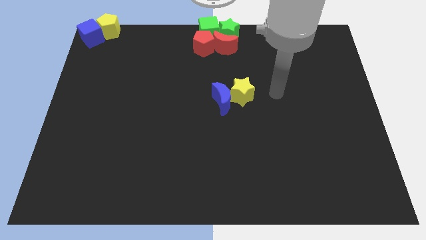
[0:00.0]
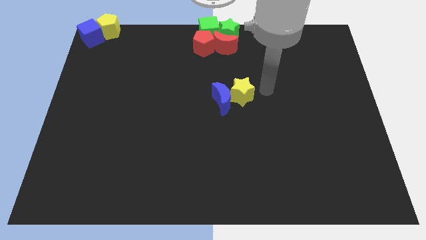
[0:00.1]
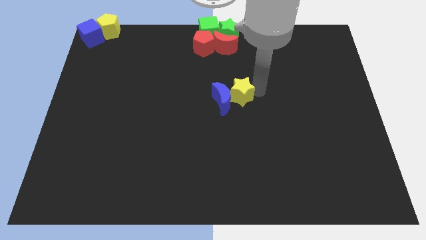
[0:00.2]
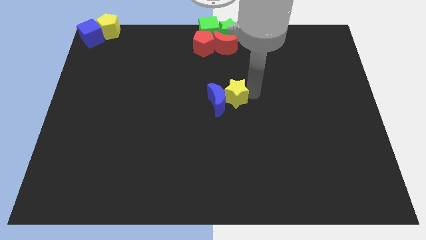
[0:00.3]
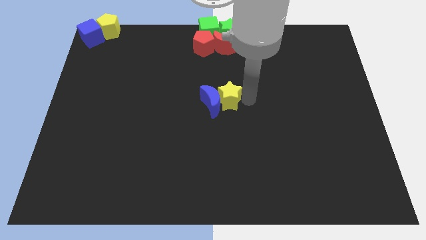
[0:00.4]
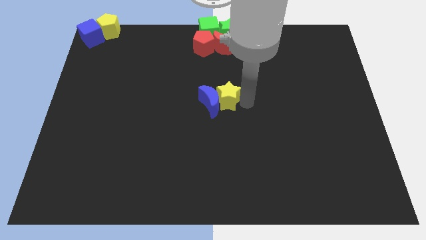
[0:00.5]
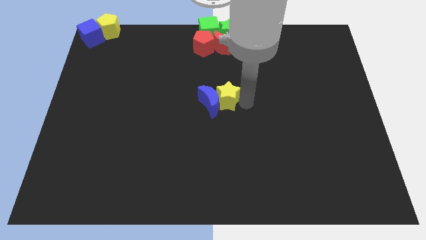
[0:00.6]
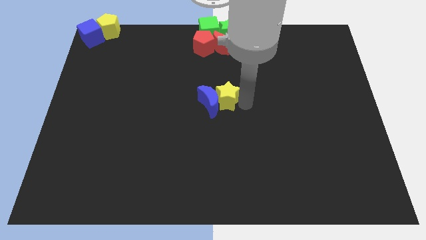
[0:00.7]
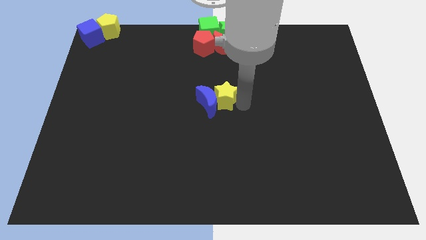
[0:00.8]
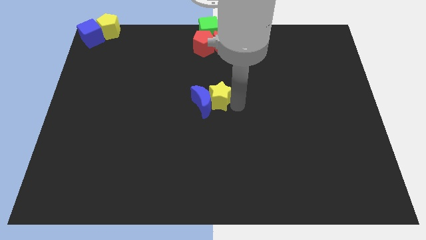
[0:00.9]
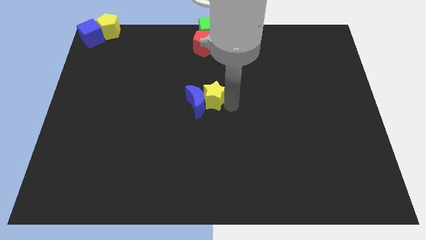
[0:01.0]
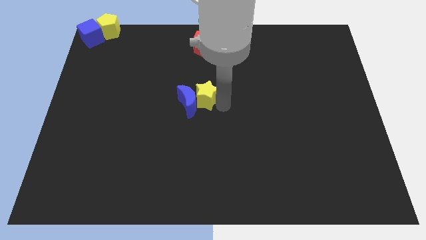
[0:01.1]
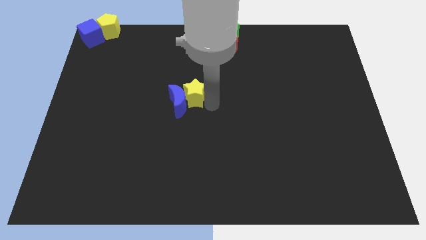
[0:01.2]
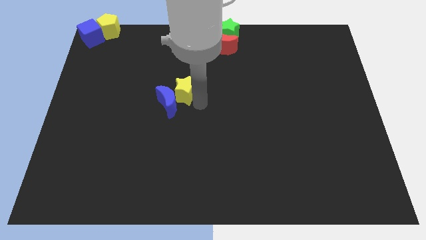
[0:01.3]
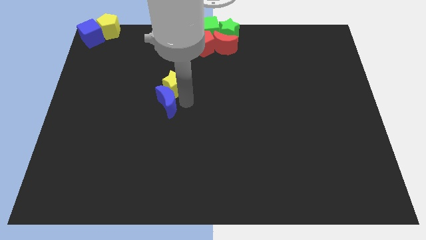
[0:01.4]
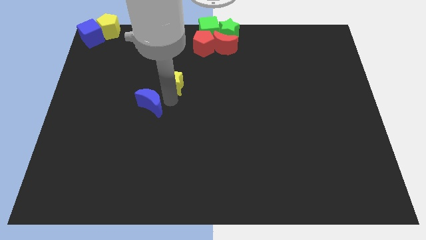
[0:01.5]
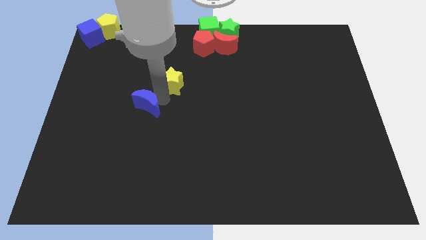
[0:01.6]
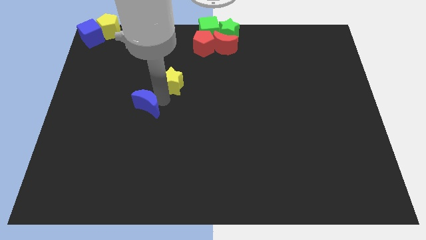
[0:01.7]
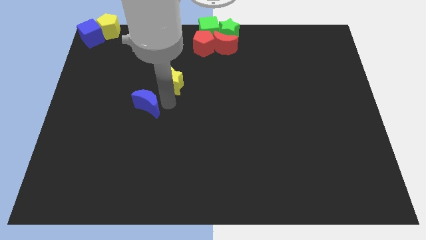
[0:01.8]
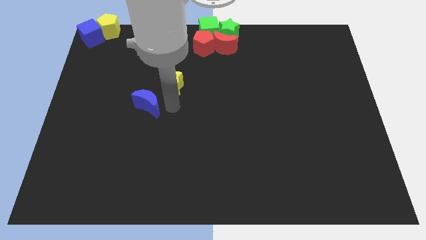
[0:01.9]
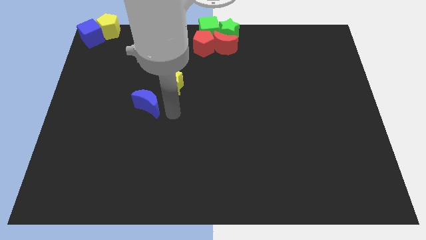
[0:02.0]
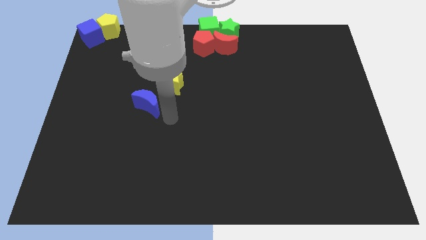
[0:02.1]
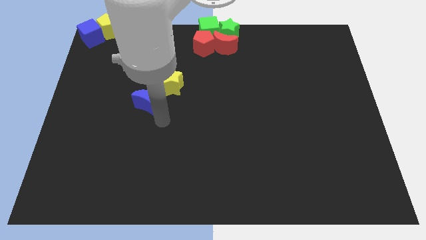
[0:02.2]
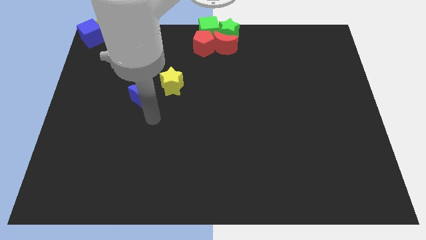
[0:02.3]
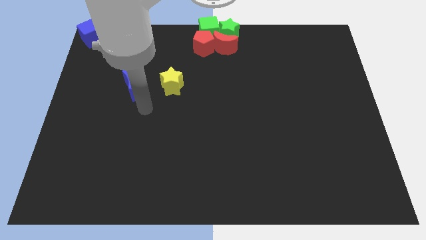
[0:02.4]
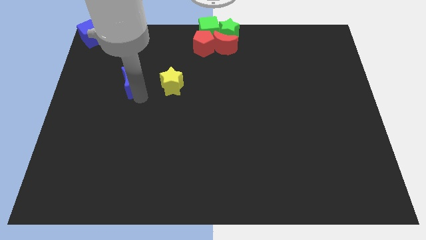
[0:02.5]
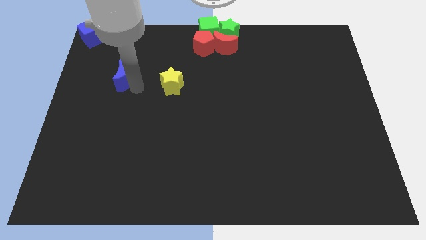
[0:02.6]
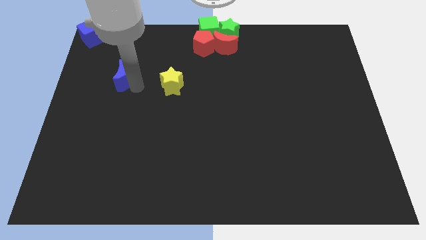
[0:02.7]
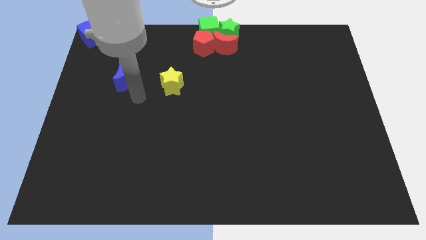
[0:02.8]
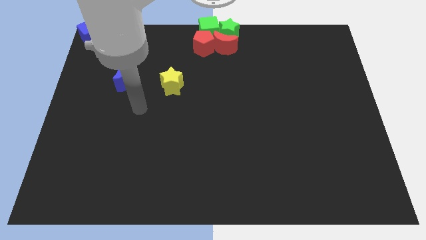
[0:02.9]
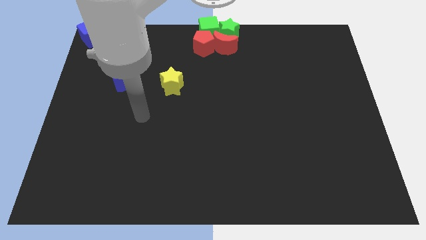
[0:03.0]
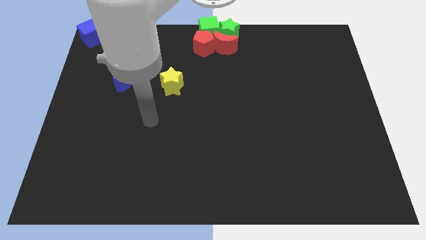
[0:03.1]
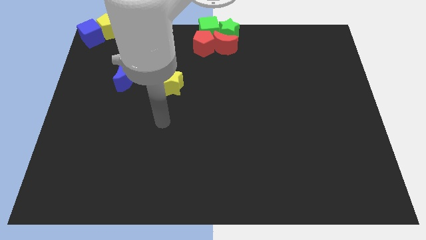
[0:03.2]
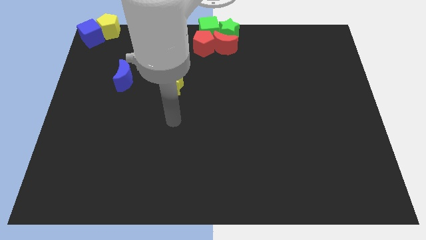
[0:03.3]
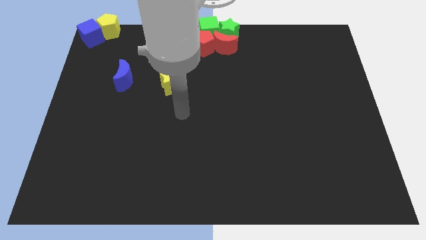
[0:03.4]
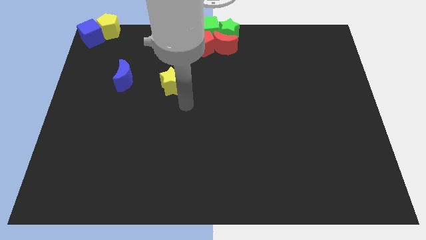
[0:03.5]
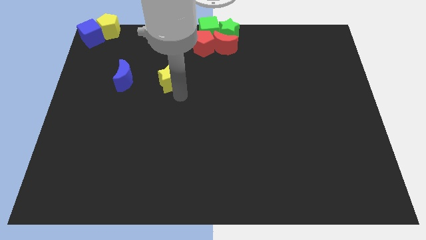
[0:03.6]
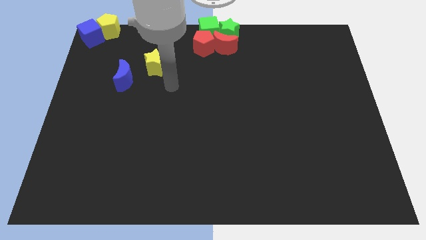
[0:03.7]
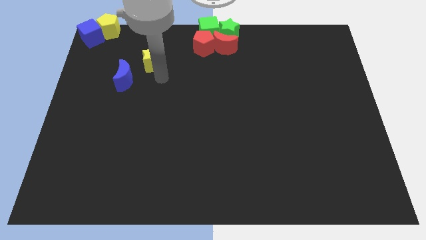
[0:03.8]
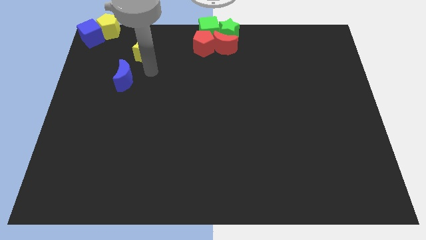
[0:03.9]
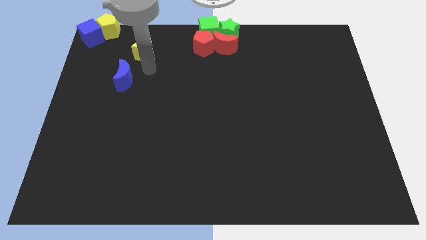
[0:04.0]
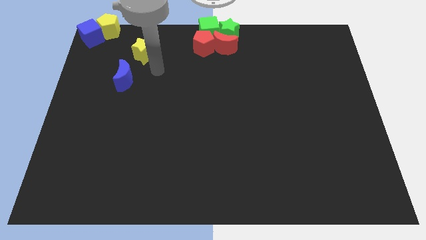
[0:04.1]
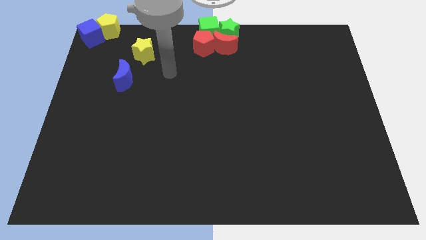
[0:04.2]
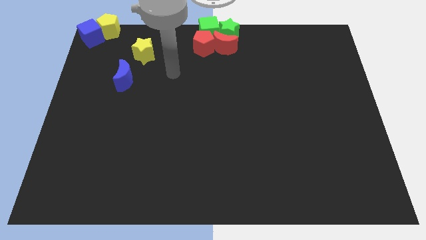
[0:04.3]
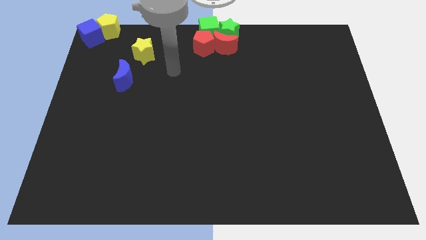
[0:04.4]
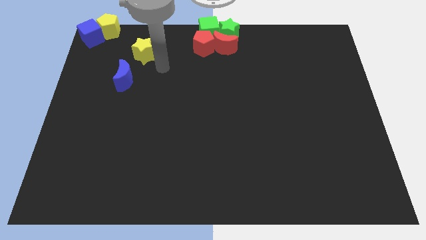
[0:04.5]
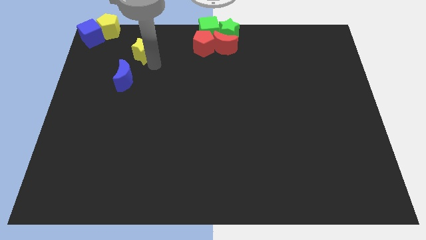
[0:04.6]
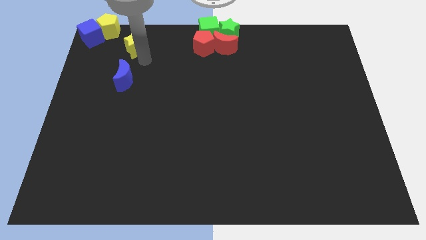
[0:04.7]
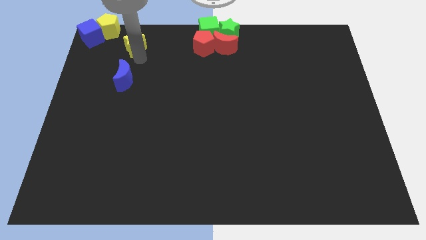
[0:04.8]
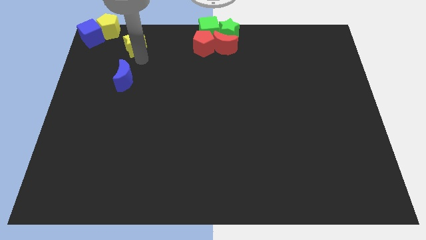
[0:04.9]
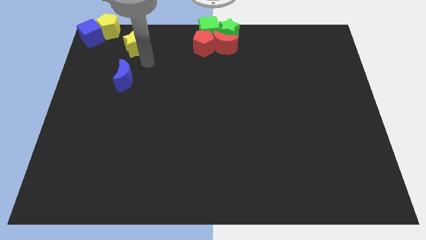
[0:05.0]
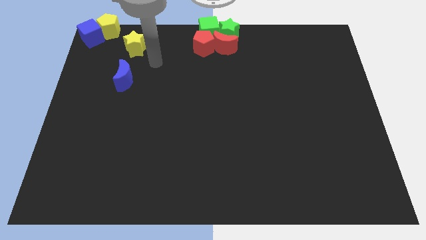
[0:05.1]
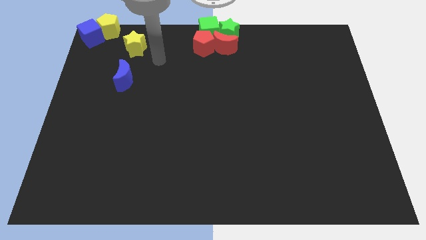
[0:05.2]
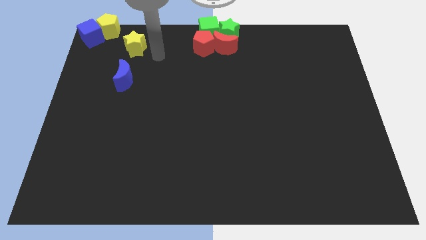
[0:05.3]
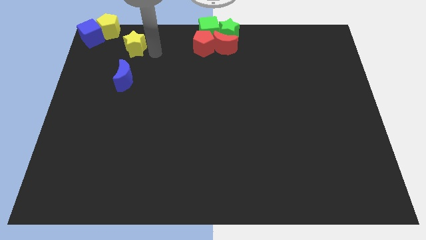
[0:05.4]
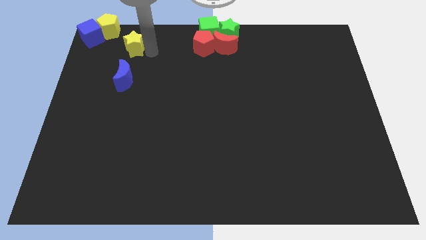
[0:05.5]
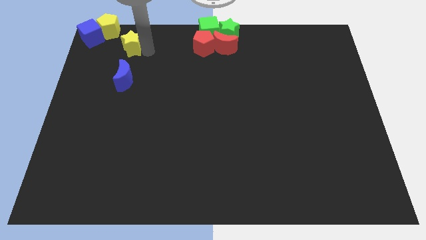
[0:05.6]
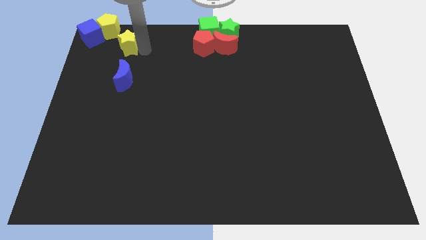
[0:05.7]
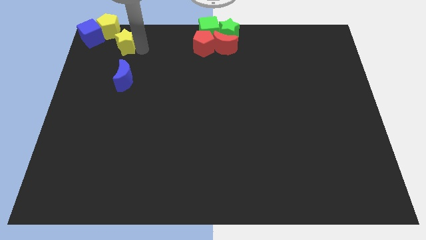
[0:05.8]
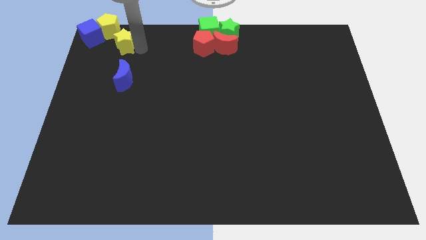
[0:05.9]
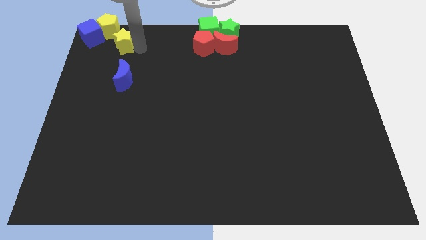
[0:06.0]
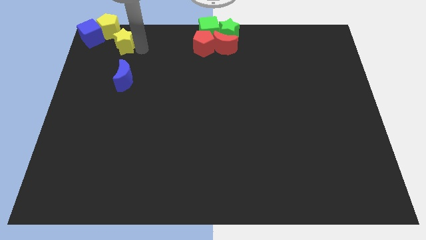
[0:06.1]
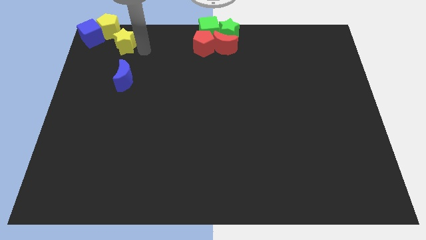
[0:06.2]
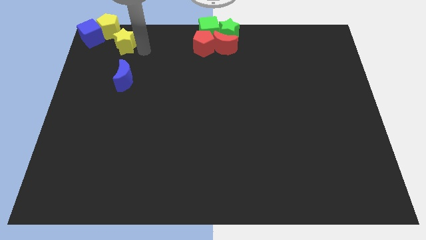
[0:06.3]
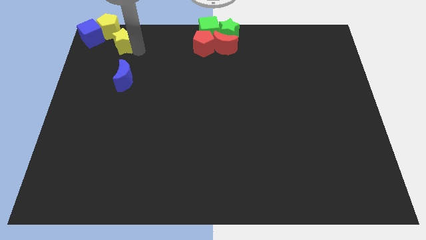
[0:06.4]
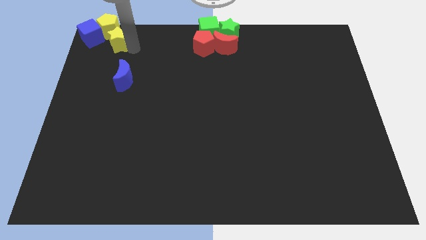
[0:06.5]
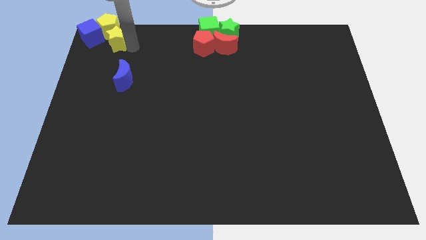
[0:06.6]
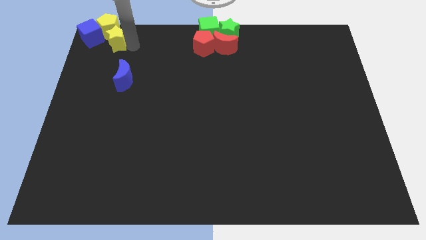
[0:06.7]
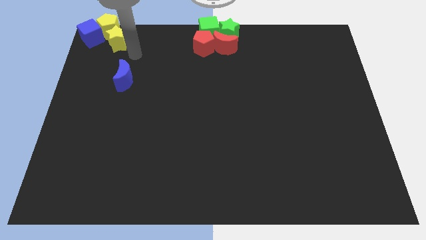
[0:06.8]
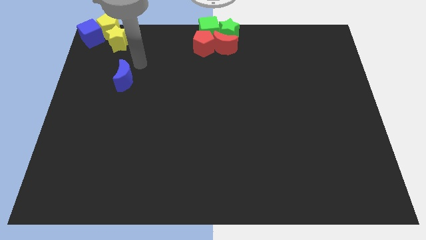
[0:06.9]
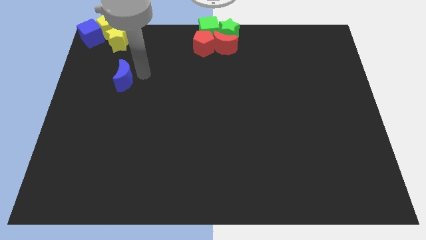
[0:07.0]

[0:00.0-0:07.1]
move the yellow star below the yellow pentagon

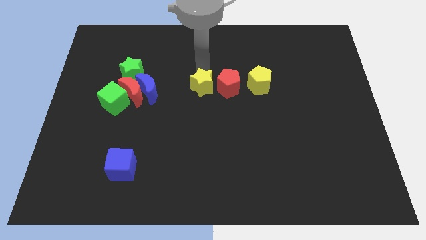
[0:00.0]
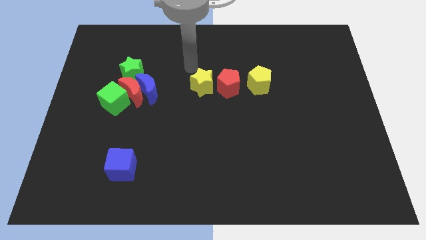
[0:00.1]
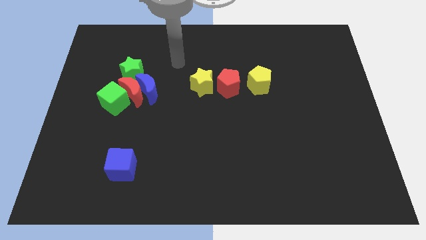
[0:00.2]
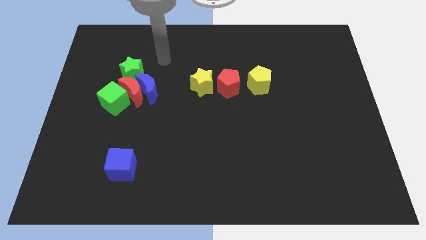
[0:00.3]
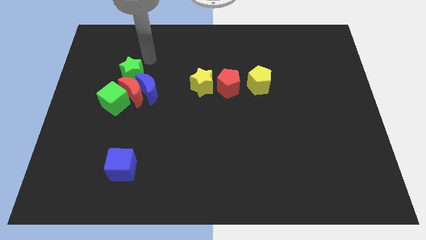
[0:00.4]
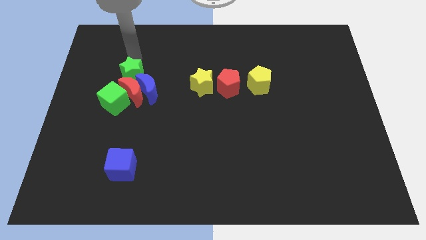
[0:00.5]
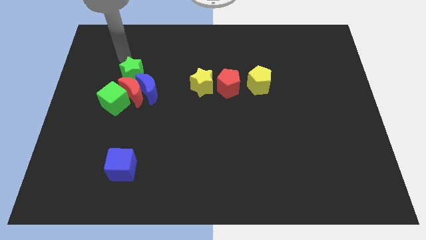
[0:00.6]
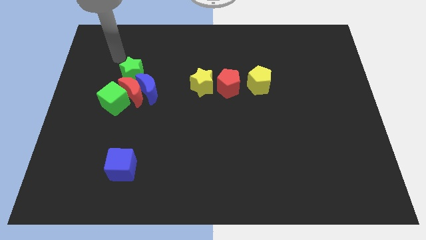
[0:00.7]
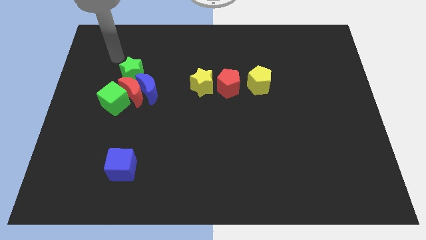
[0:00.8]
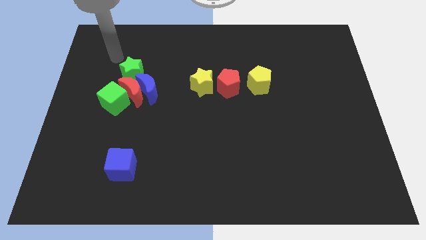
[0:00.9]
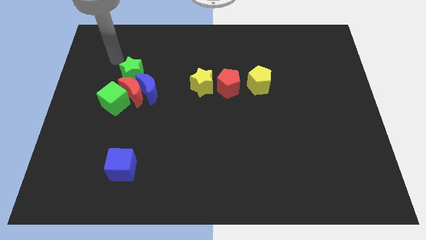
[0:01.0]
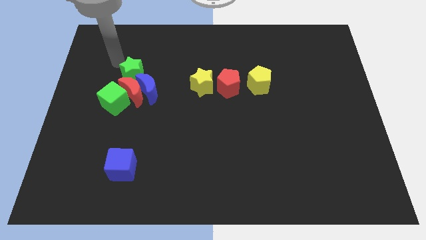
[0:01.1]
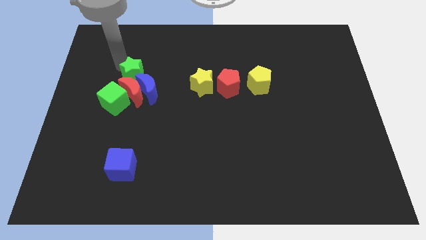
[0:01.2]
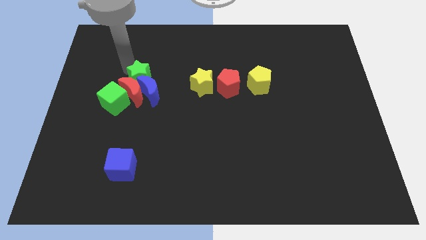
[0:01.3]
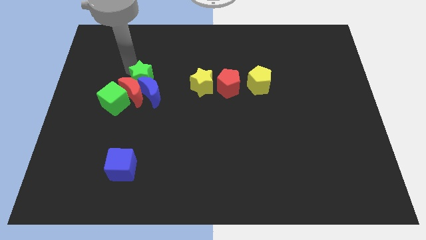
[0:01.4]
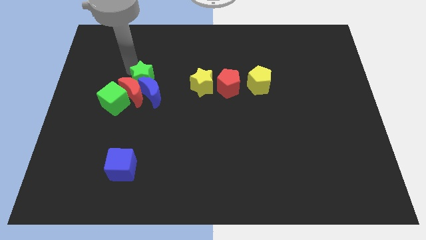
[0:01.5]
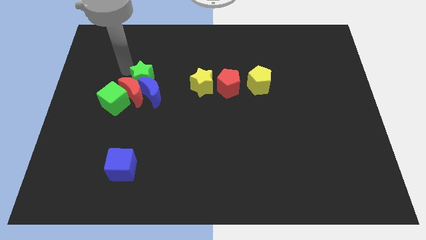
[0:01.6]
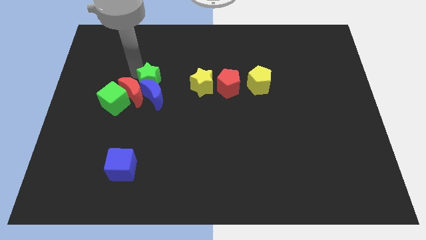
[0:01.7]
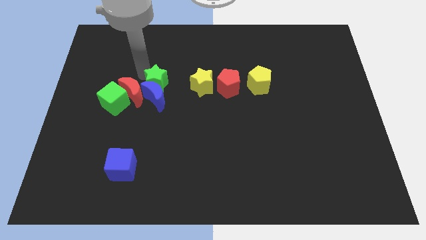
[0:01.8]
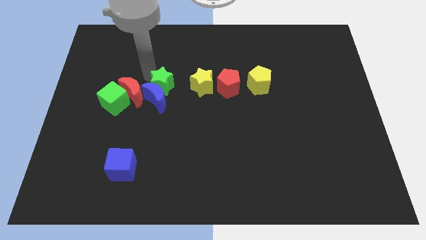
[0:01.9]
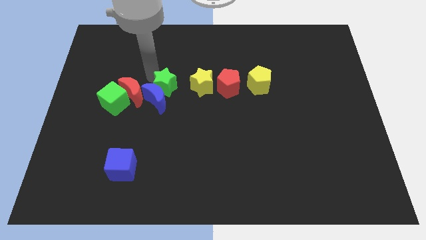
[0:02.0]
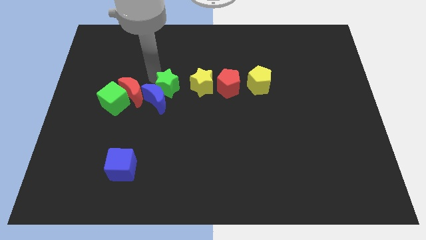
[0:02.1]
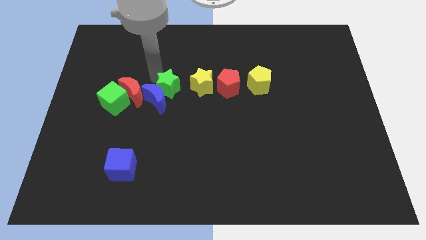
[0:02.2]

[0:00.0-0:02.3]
move the green star to the left of the yellow star
